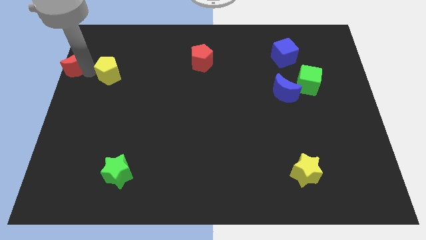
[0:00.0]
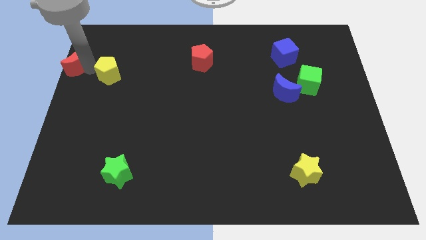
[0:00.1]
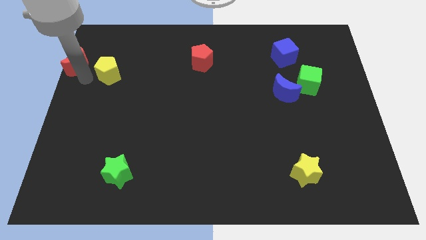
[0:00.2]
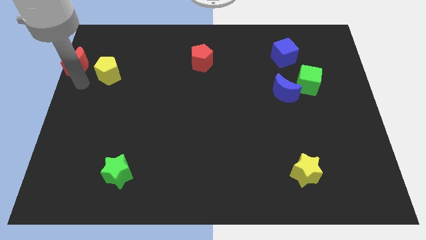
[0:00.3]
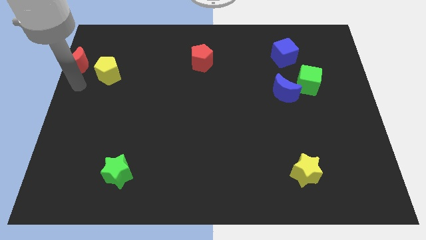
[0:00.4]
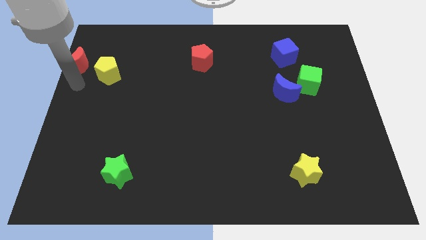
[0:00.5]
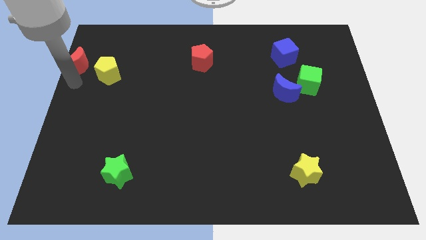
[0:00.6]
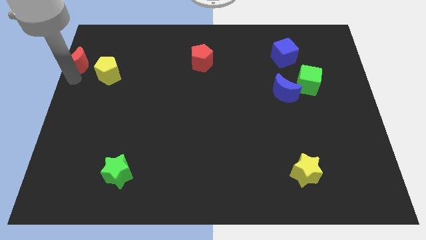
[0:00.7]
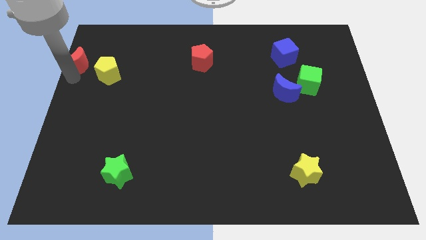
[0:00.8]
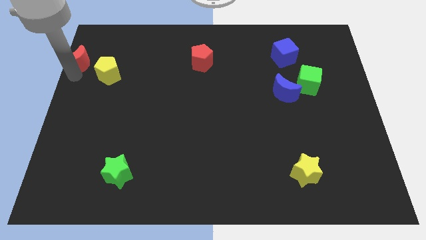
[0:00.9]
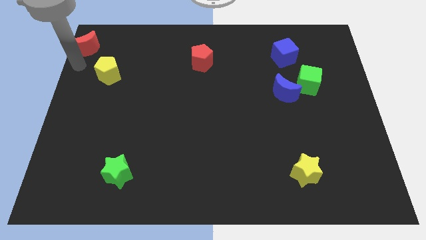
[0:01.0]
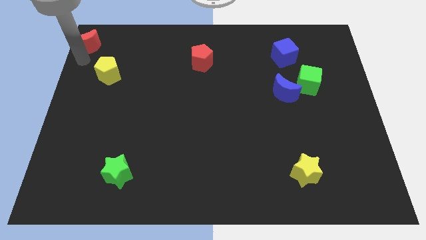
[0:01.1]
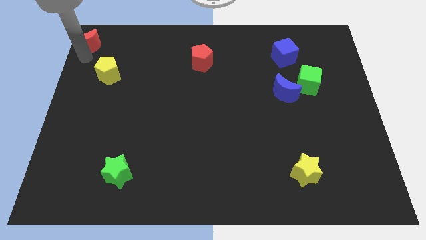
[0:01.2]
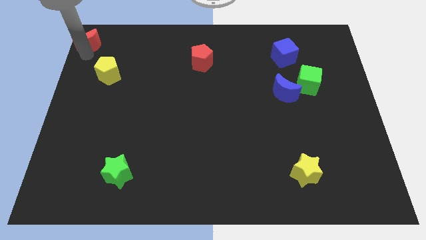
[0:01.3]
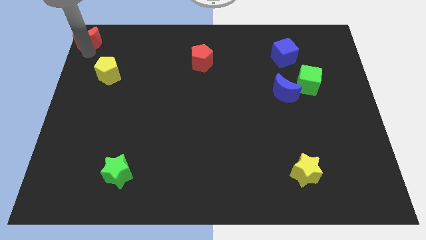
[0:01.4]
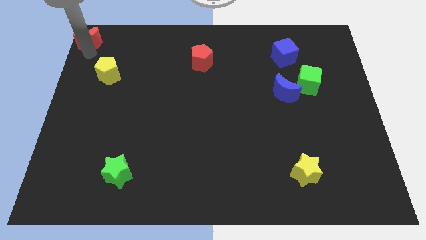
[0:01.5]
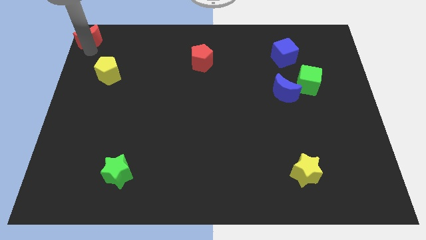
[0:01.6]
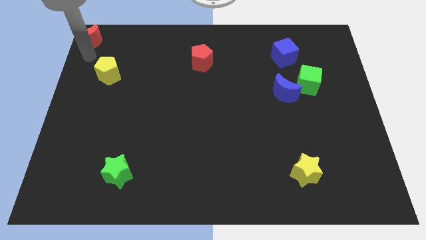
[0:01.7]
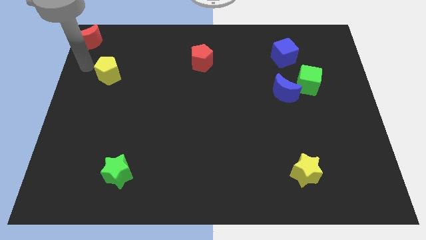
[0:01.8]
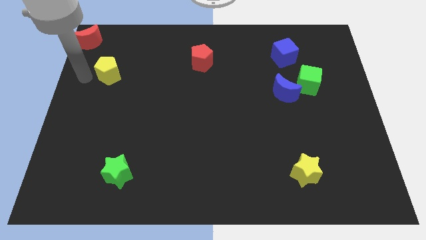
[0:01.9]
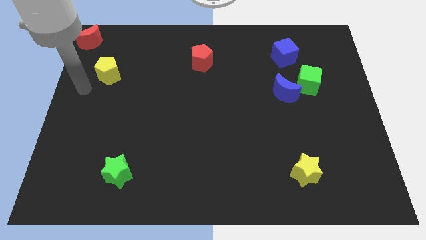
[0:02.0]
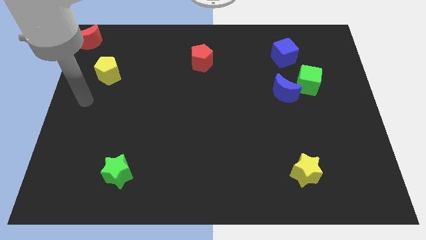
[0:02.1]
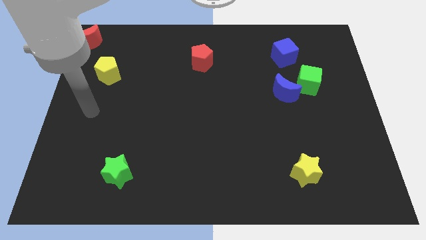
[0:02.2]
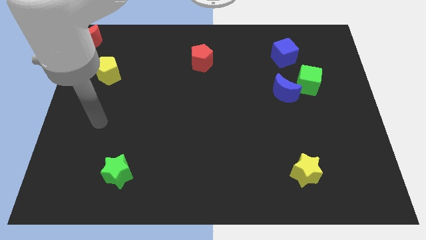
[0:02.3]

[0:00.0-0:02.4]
move the red moon to the top left corner of the board

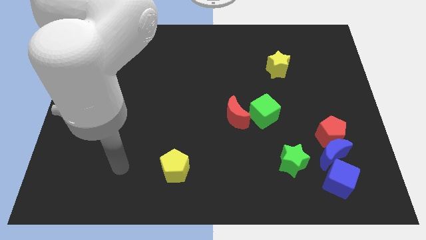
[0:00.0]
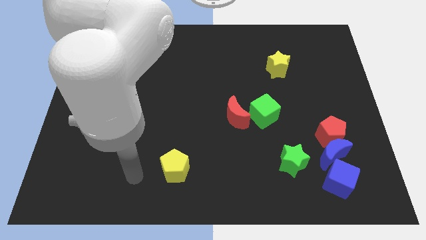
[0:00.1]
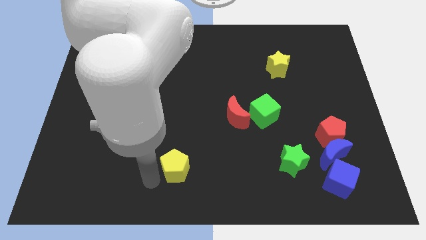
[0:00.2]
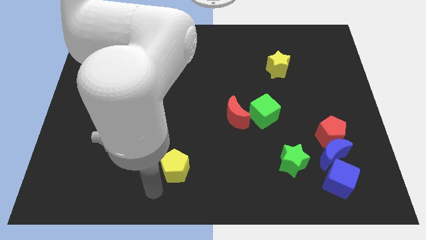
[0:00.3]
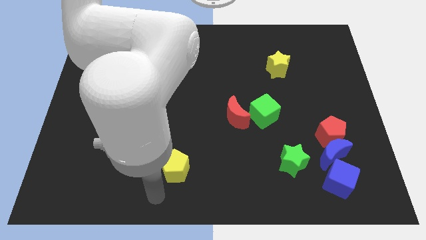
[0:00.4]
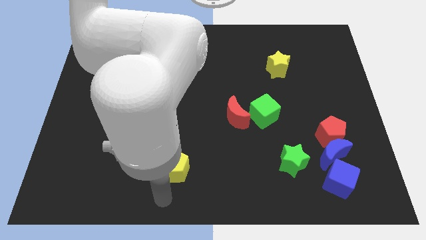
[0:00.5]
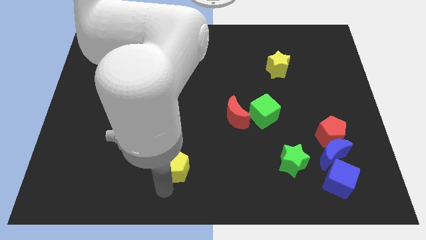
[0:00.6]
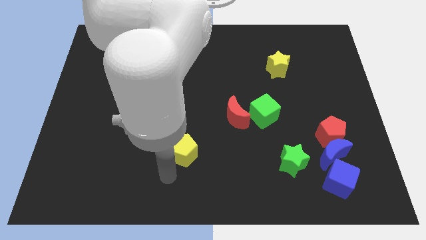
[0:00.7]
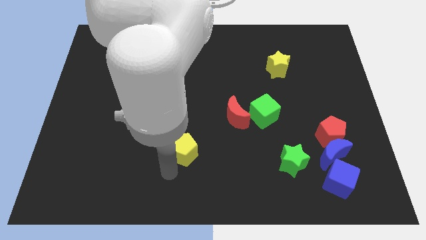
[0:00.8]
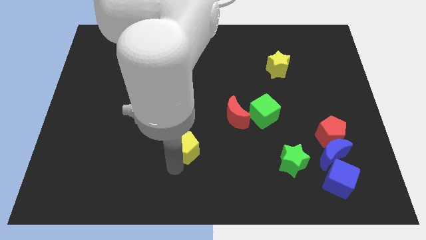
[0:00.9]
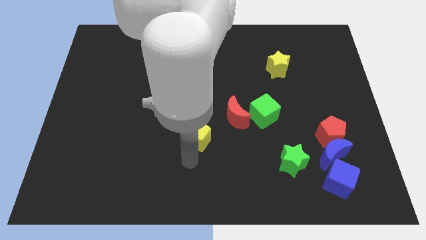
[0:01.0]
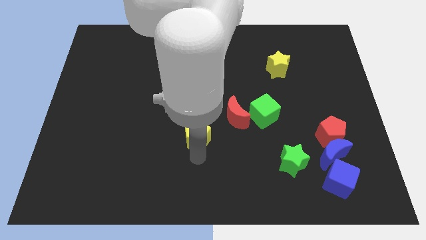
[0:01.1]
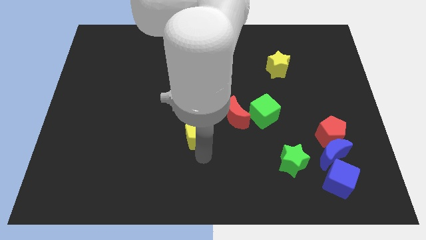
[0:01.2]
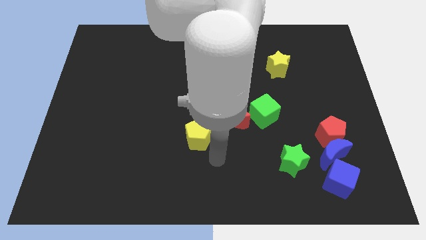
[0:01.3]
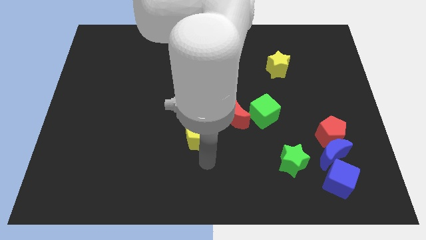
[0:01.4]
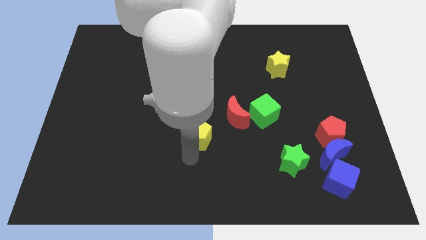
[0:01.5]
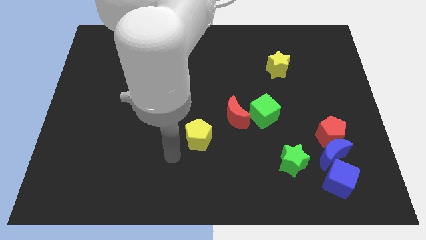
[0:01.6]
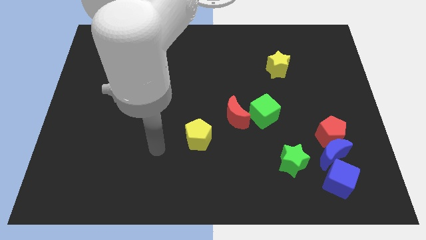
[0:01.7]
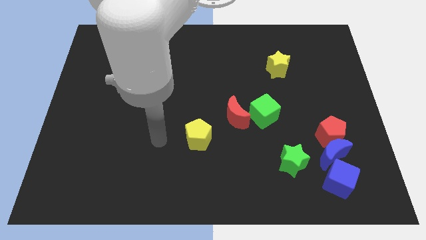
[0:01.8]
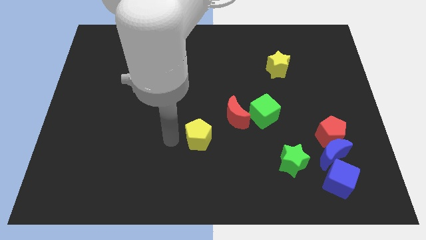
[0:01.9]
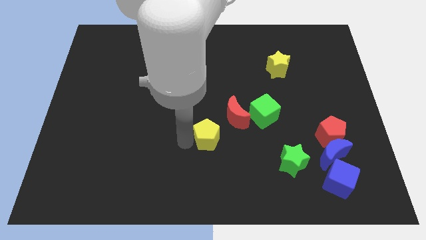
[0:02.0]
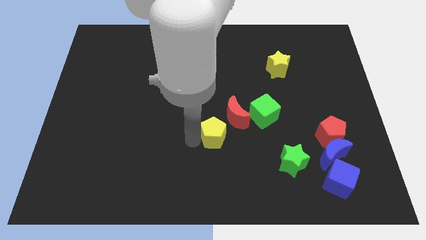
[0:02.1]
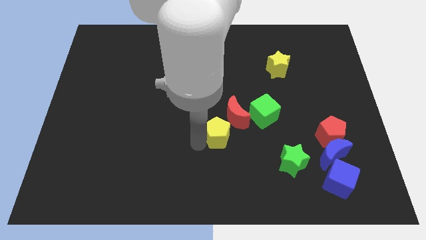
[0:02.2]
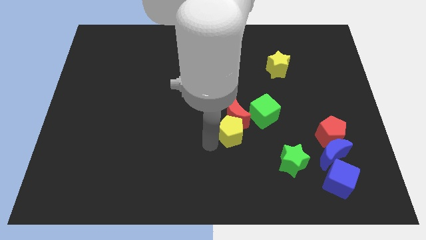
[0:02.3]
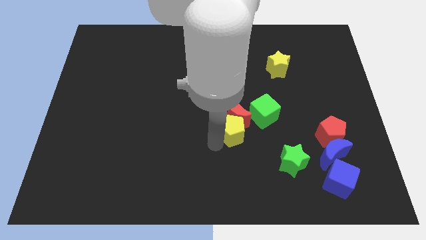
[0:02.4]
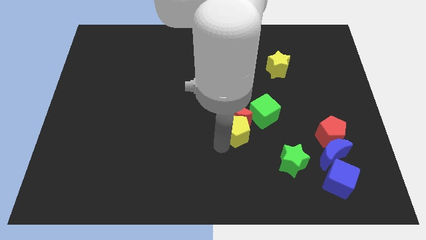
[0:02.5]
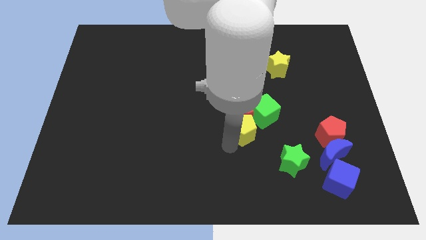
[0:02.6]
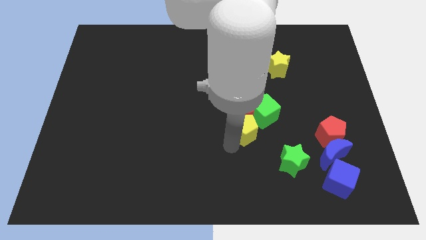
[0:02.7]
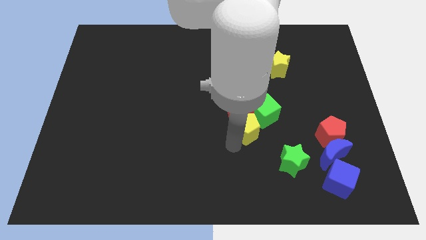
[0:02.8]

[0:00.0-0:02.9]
move yellow pentagon to the bottom of red moon

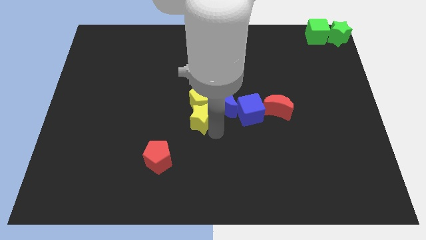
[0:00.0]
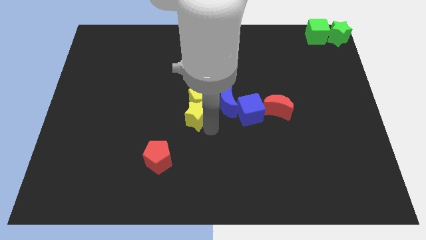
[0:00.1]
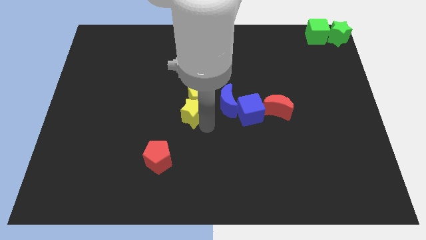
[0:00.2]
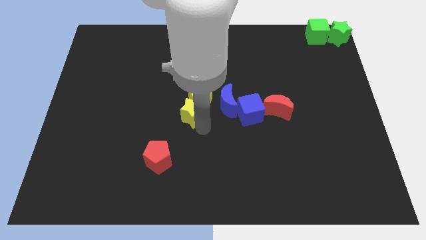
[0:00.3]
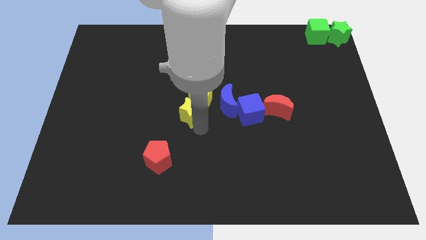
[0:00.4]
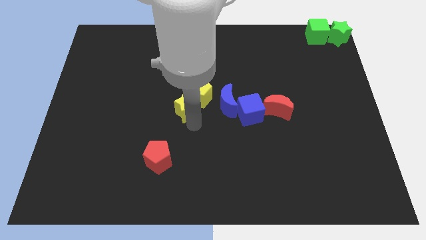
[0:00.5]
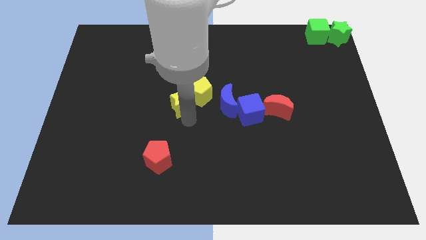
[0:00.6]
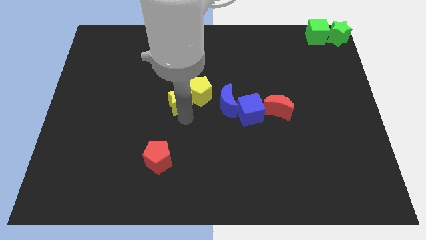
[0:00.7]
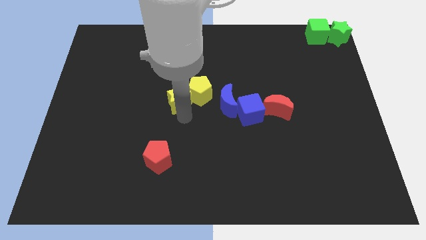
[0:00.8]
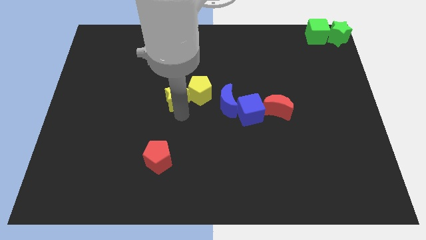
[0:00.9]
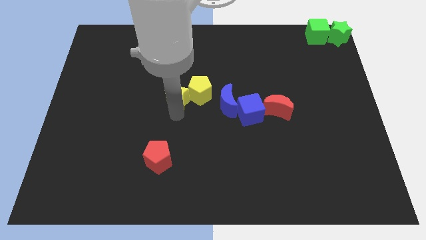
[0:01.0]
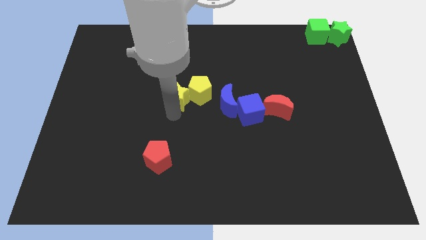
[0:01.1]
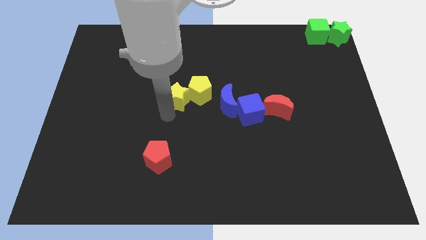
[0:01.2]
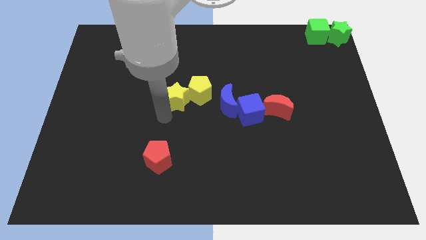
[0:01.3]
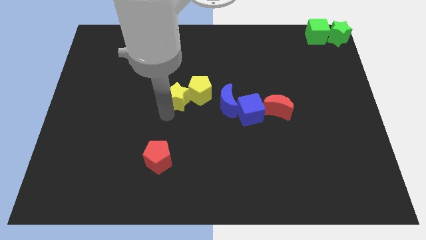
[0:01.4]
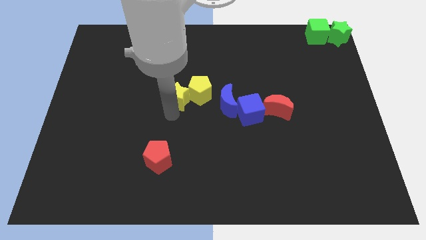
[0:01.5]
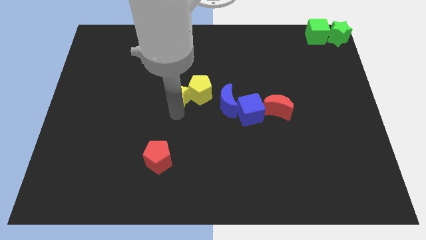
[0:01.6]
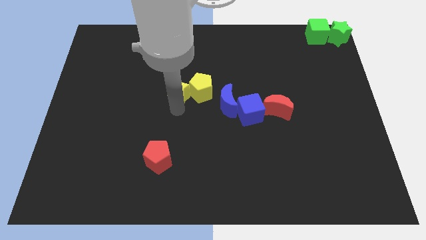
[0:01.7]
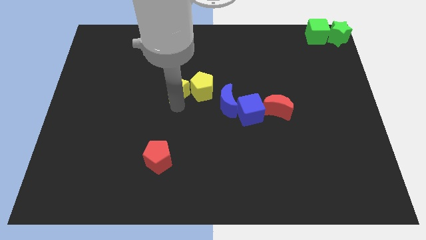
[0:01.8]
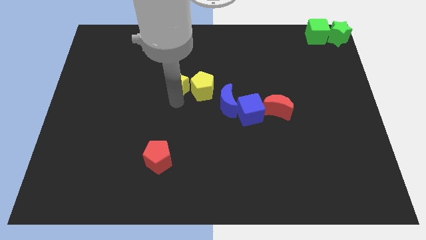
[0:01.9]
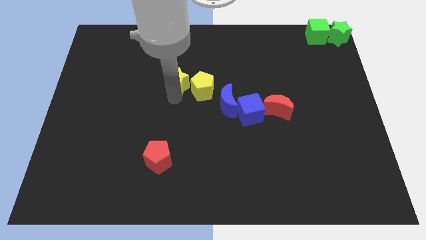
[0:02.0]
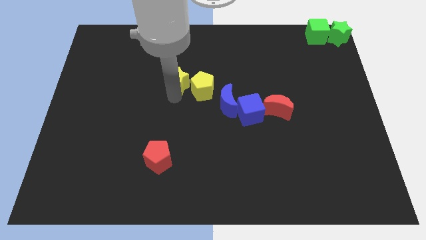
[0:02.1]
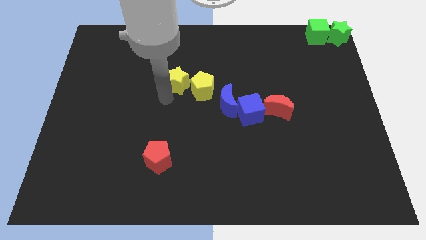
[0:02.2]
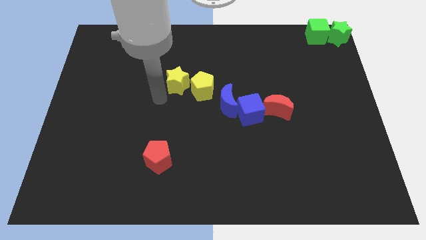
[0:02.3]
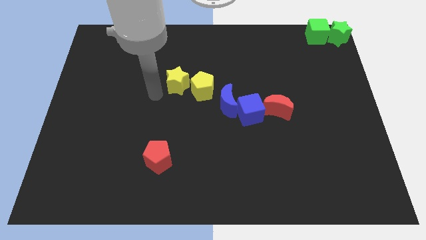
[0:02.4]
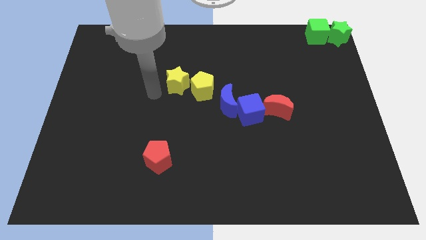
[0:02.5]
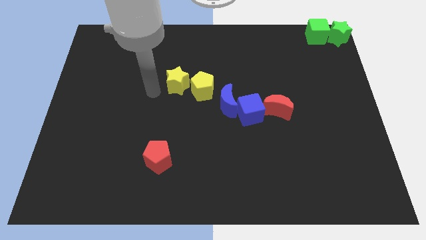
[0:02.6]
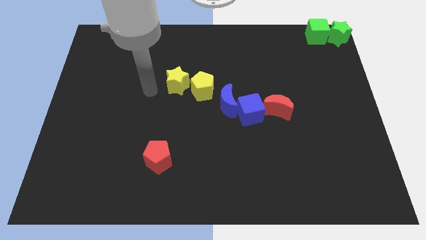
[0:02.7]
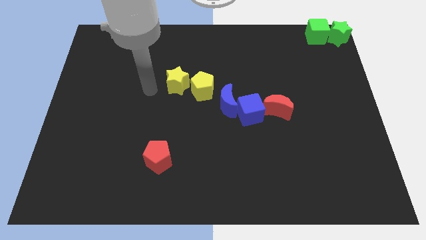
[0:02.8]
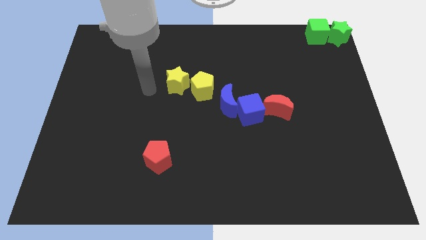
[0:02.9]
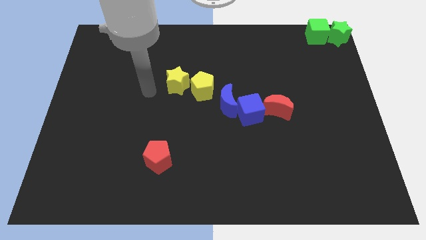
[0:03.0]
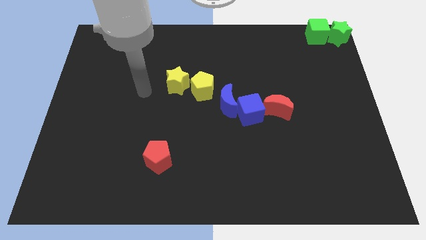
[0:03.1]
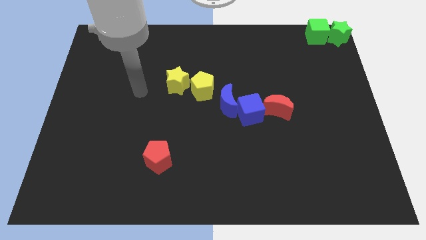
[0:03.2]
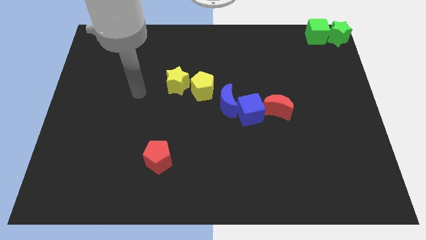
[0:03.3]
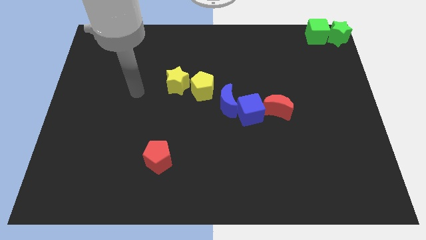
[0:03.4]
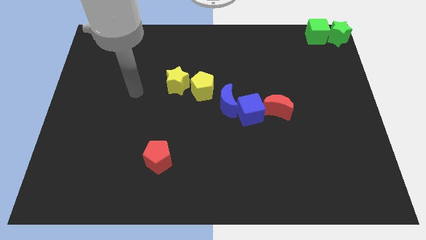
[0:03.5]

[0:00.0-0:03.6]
put the yellow star to the left of the yellow pentagon

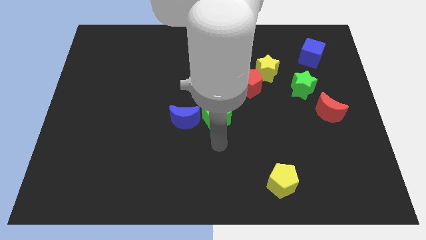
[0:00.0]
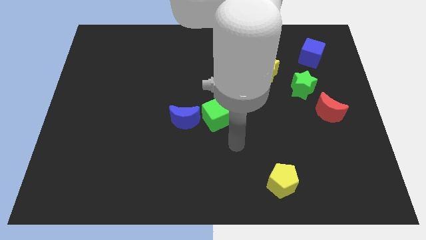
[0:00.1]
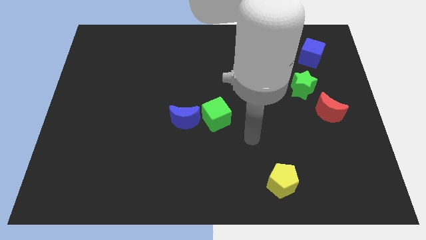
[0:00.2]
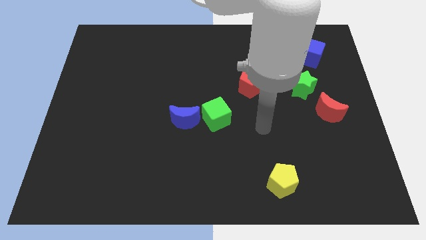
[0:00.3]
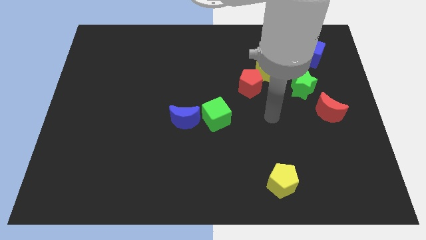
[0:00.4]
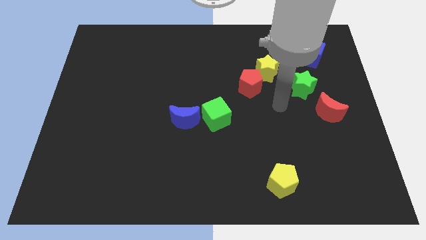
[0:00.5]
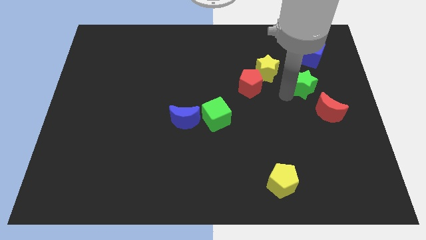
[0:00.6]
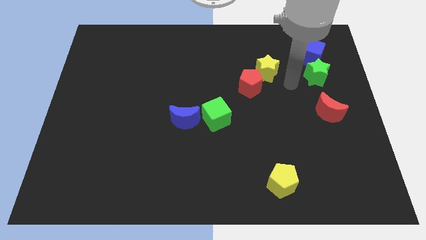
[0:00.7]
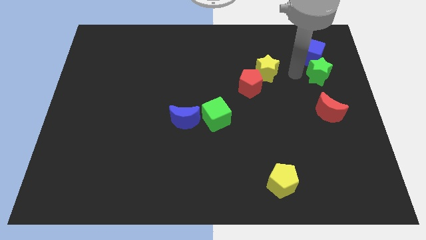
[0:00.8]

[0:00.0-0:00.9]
move green star in to blue cube
